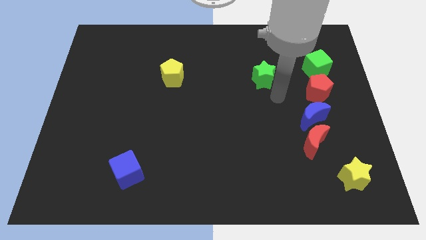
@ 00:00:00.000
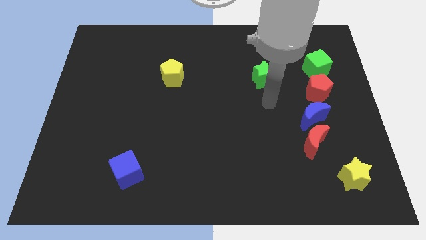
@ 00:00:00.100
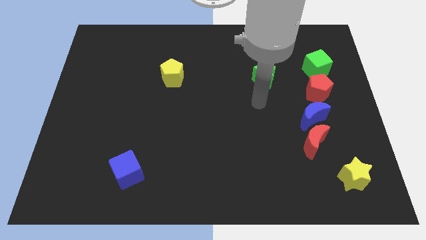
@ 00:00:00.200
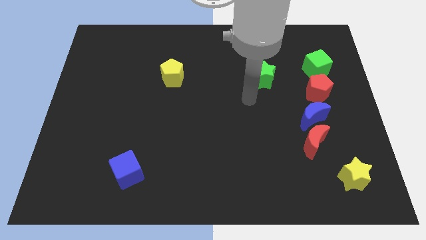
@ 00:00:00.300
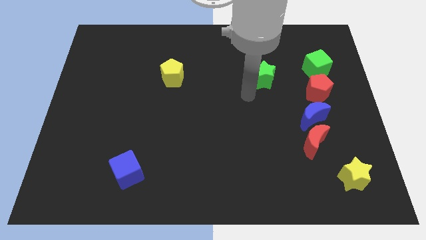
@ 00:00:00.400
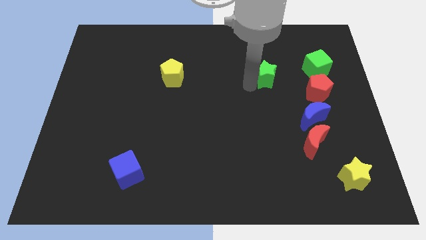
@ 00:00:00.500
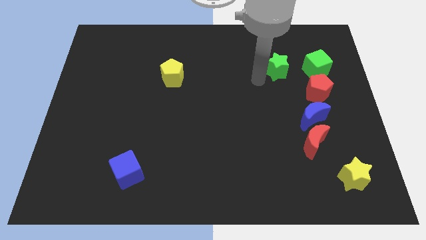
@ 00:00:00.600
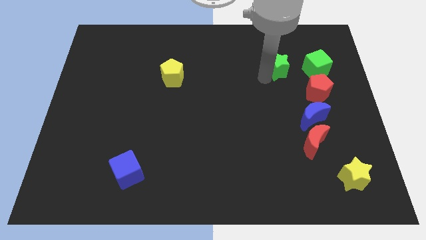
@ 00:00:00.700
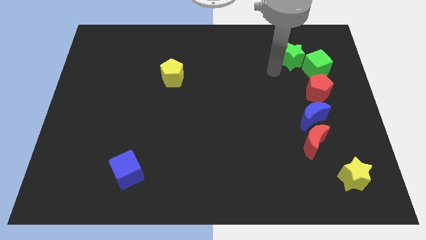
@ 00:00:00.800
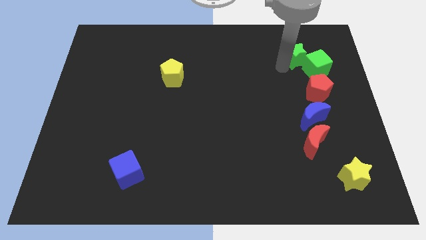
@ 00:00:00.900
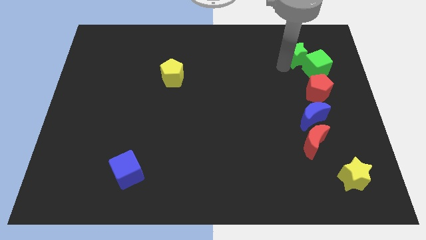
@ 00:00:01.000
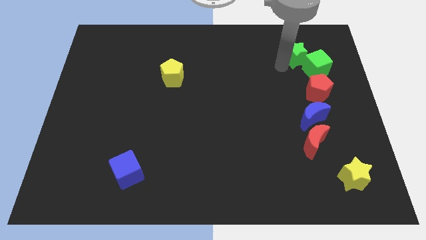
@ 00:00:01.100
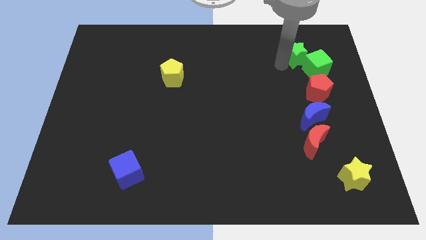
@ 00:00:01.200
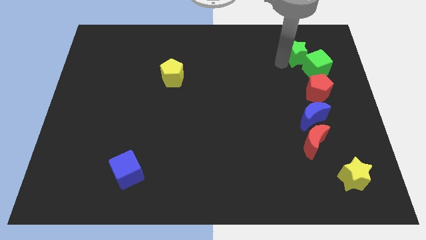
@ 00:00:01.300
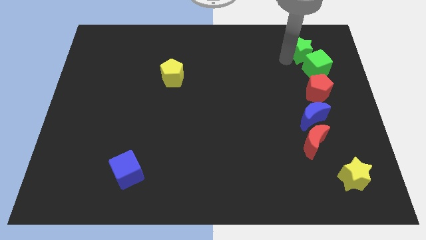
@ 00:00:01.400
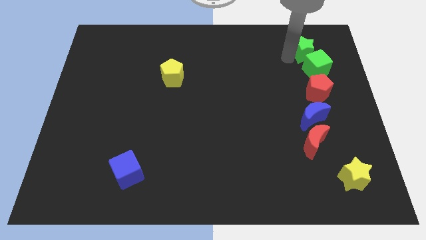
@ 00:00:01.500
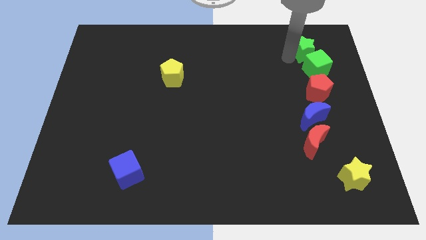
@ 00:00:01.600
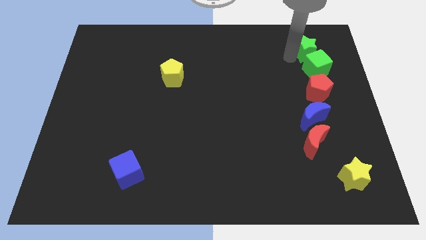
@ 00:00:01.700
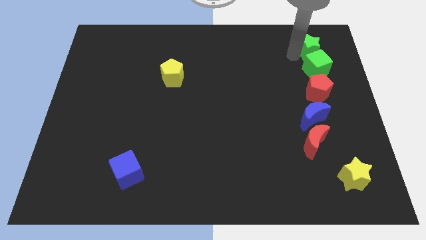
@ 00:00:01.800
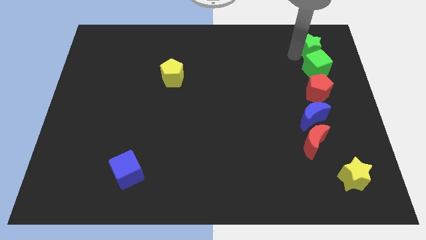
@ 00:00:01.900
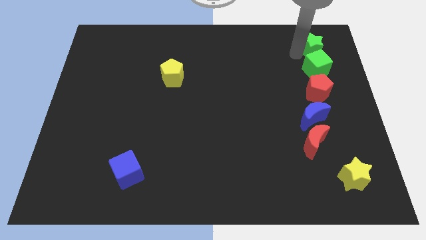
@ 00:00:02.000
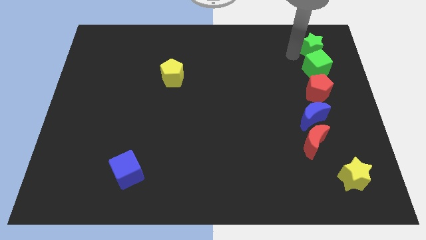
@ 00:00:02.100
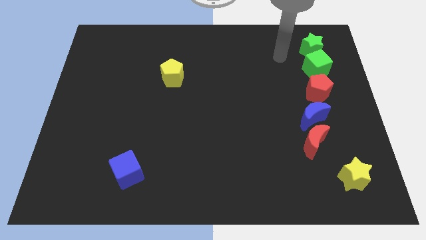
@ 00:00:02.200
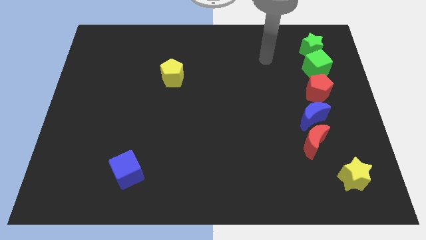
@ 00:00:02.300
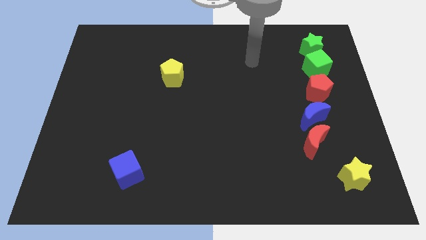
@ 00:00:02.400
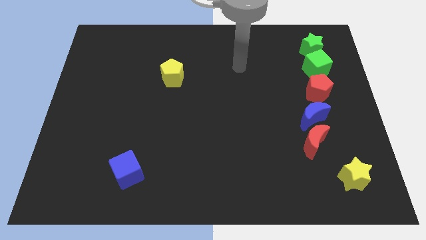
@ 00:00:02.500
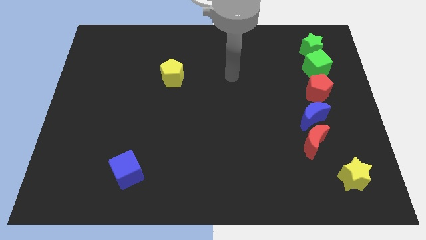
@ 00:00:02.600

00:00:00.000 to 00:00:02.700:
place green star on top of the green cube

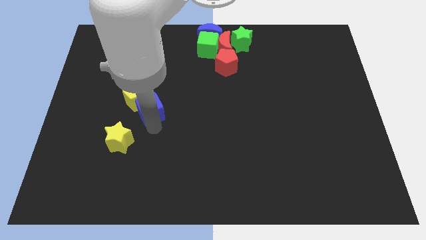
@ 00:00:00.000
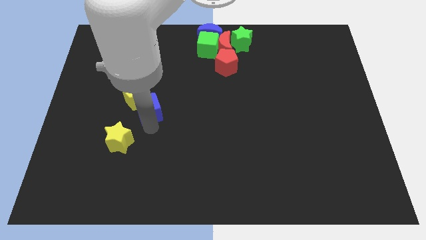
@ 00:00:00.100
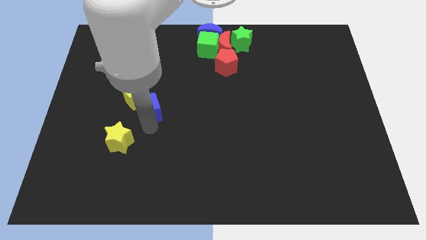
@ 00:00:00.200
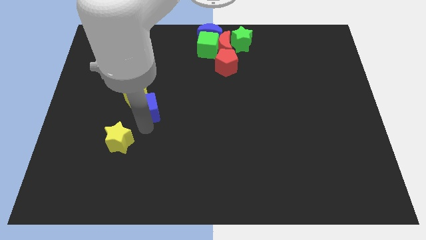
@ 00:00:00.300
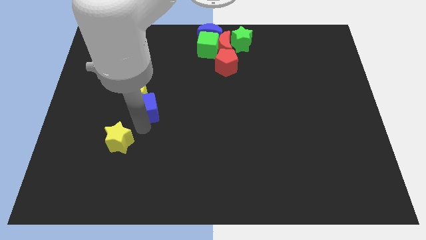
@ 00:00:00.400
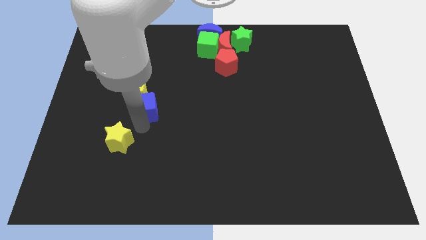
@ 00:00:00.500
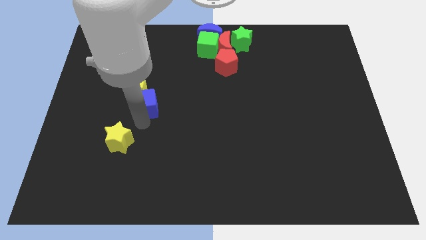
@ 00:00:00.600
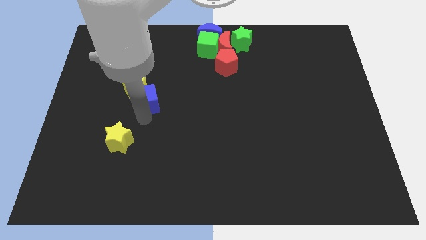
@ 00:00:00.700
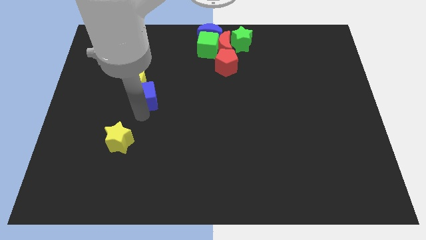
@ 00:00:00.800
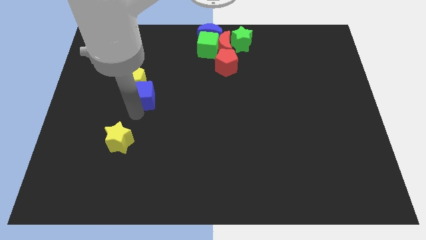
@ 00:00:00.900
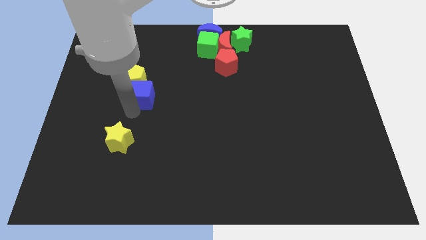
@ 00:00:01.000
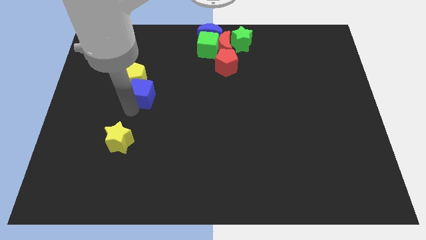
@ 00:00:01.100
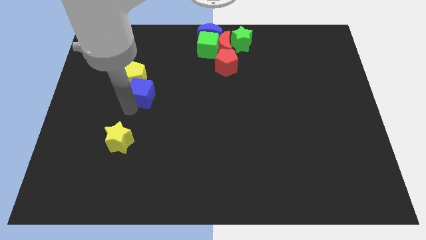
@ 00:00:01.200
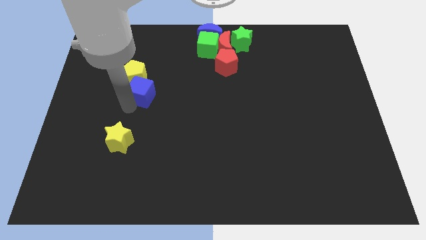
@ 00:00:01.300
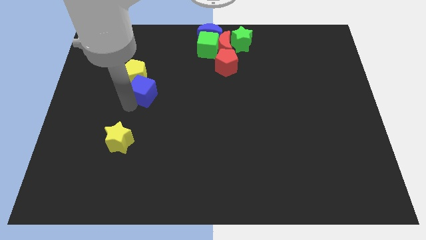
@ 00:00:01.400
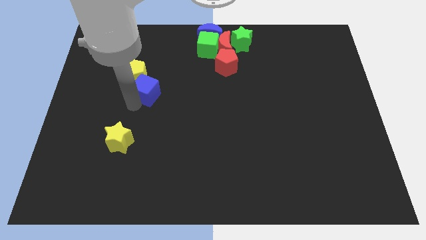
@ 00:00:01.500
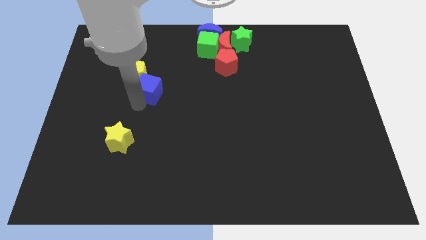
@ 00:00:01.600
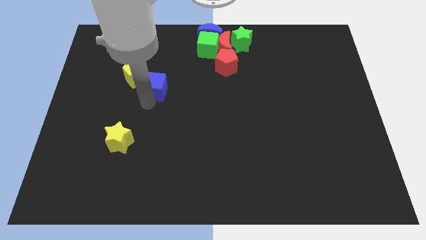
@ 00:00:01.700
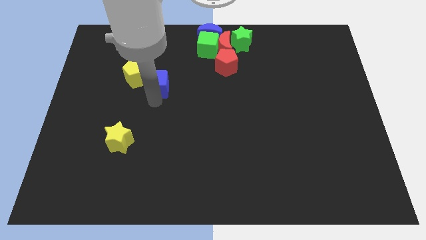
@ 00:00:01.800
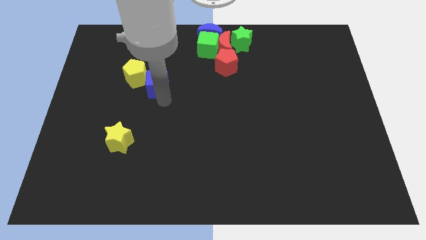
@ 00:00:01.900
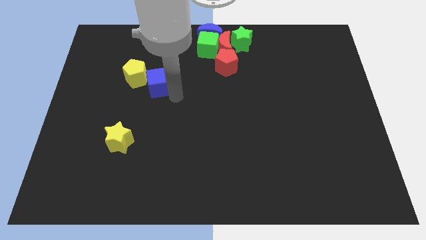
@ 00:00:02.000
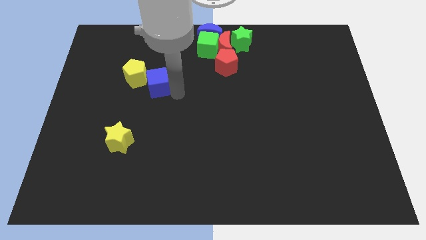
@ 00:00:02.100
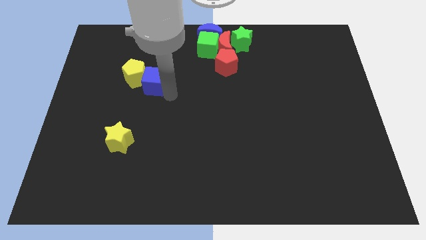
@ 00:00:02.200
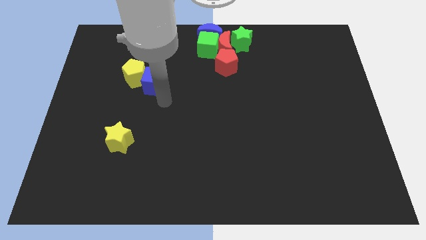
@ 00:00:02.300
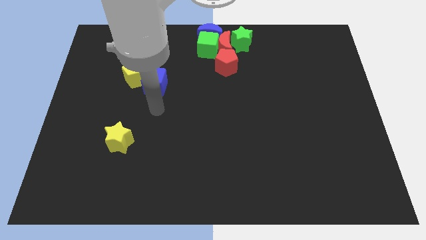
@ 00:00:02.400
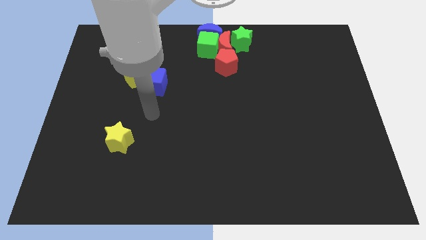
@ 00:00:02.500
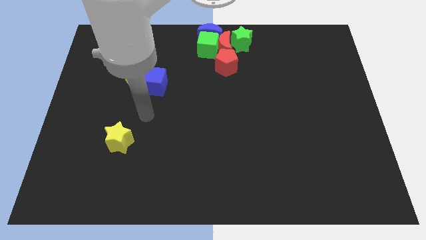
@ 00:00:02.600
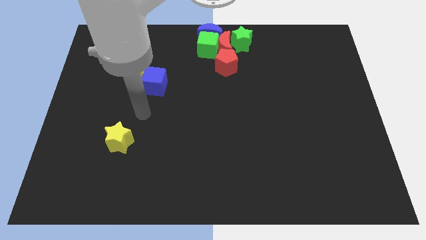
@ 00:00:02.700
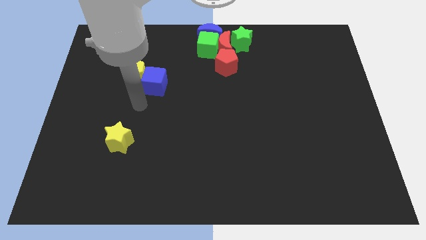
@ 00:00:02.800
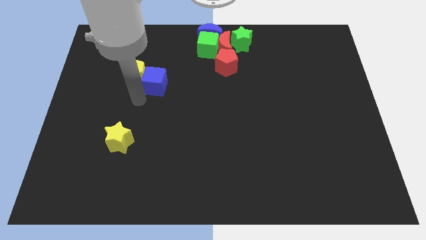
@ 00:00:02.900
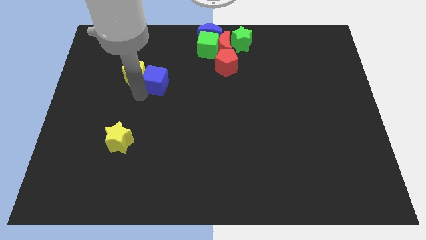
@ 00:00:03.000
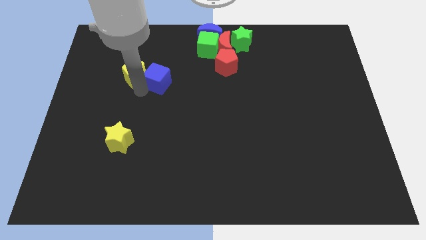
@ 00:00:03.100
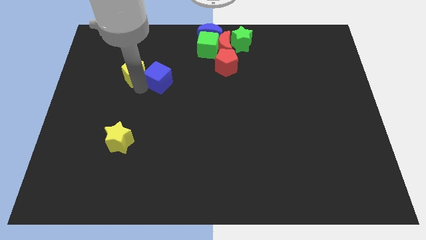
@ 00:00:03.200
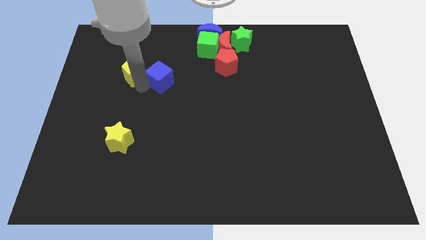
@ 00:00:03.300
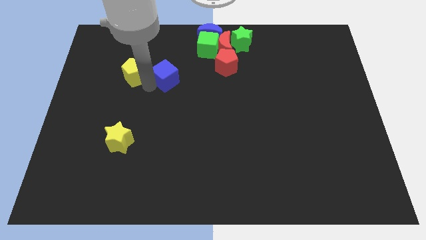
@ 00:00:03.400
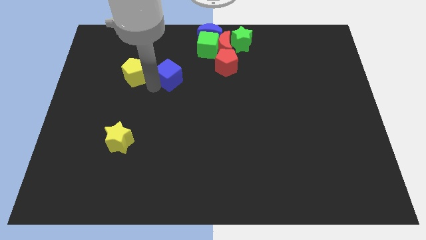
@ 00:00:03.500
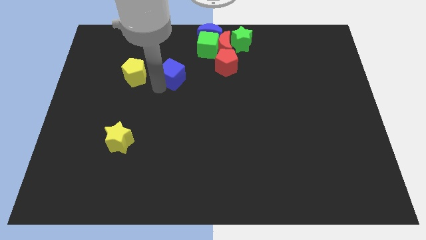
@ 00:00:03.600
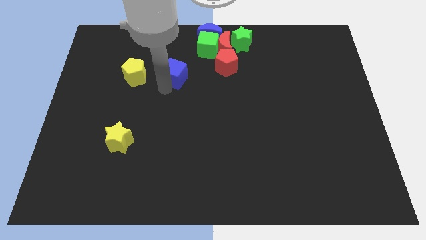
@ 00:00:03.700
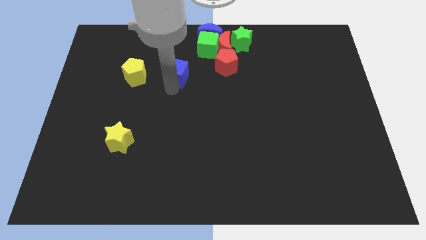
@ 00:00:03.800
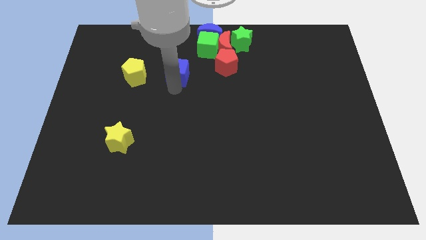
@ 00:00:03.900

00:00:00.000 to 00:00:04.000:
serparate the blue cube from the yellow pentagon

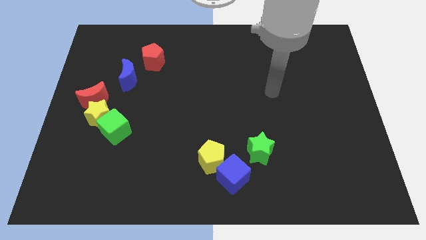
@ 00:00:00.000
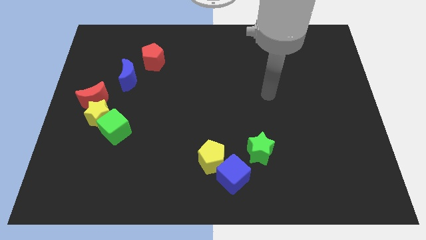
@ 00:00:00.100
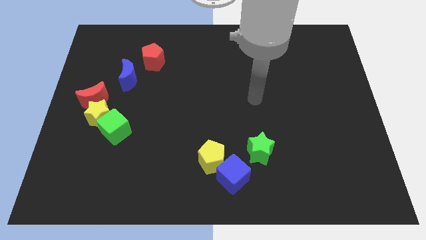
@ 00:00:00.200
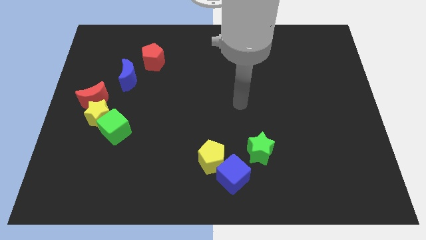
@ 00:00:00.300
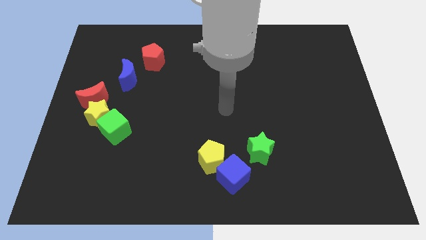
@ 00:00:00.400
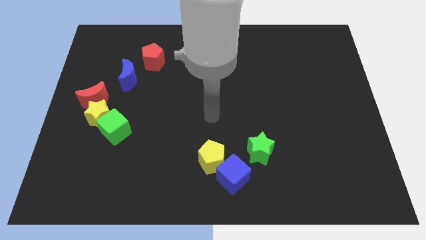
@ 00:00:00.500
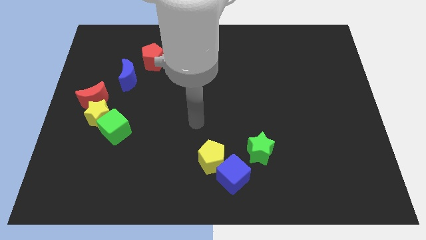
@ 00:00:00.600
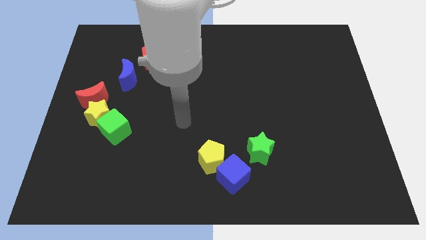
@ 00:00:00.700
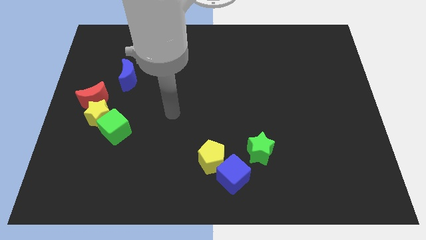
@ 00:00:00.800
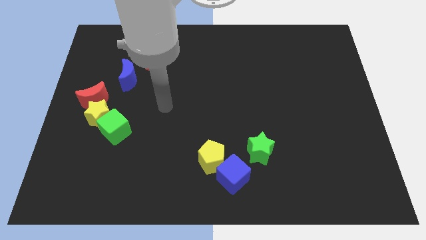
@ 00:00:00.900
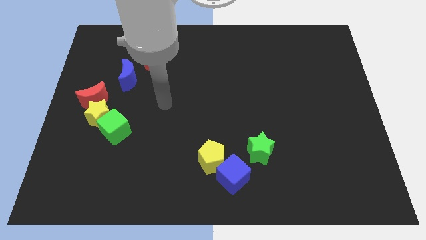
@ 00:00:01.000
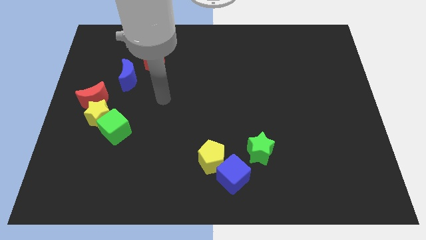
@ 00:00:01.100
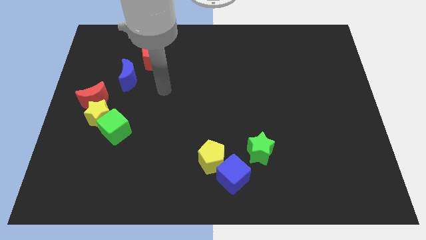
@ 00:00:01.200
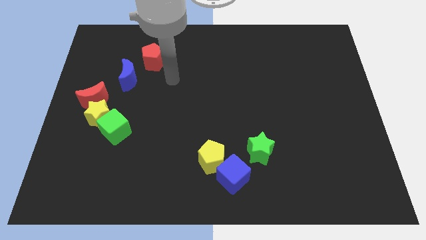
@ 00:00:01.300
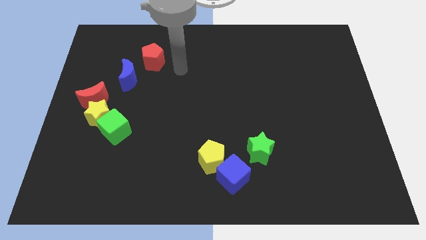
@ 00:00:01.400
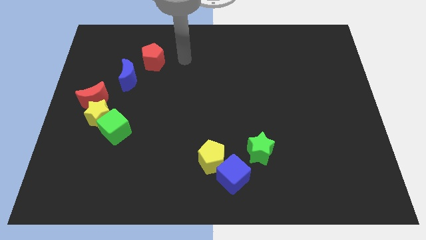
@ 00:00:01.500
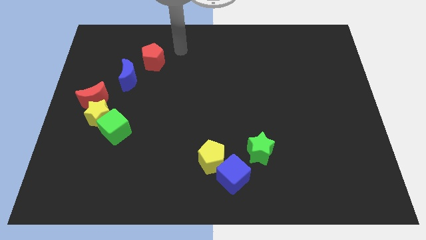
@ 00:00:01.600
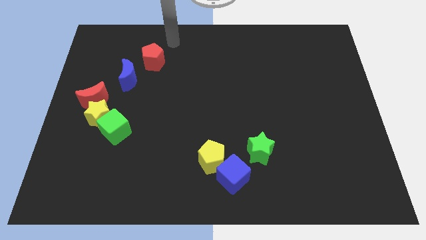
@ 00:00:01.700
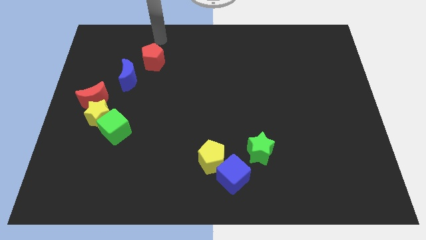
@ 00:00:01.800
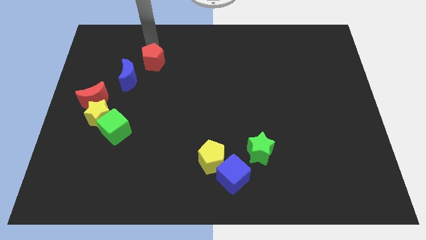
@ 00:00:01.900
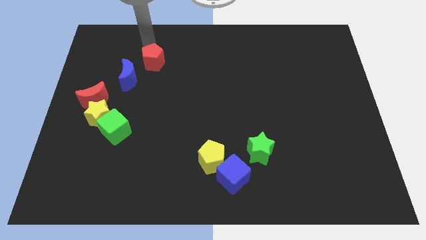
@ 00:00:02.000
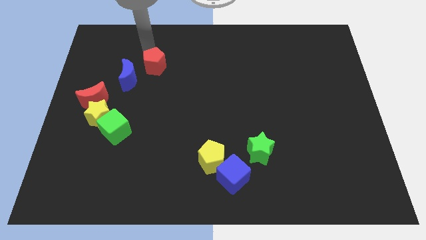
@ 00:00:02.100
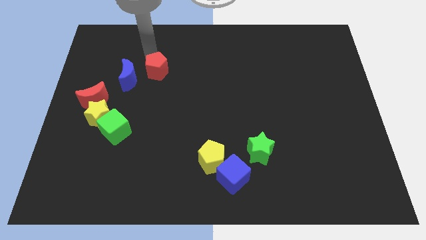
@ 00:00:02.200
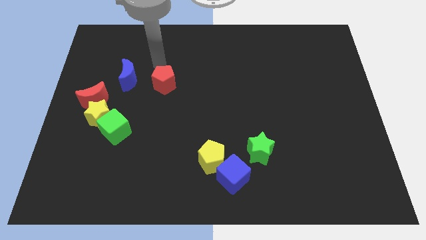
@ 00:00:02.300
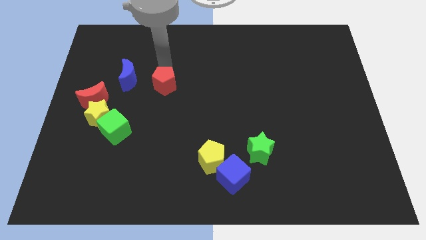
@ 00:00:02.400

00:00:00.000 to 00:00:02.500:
push the red pentagon towards the bottom side
